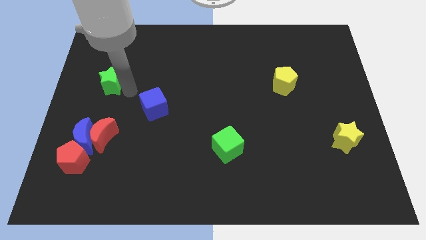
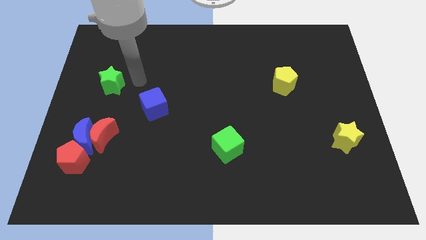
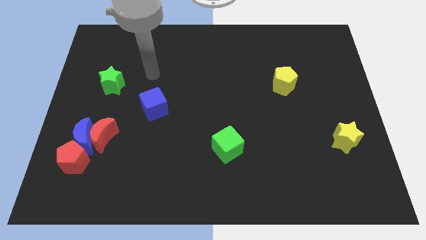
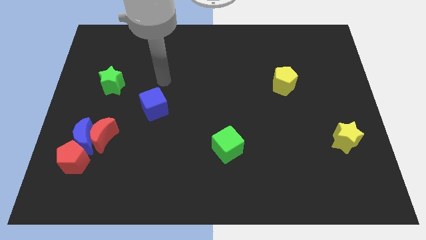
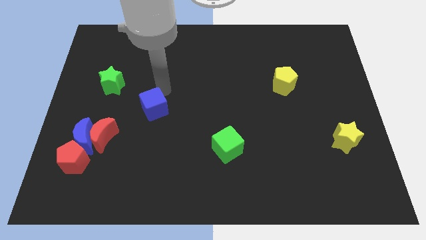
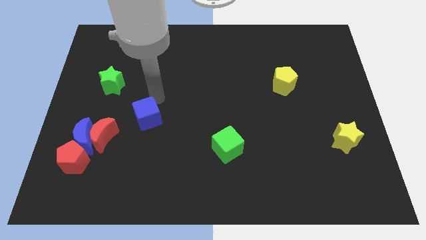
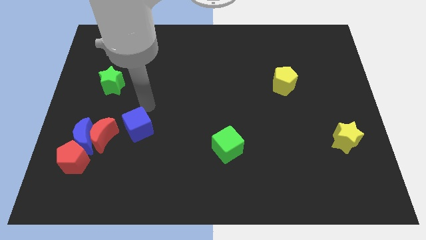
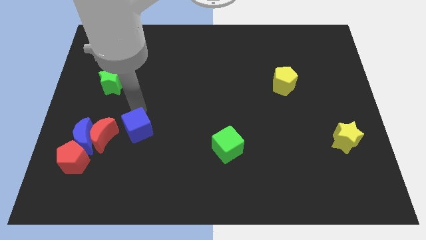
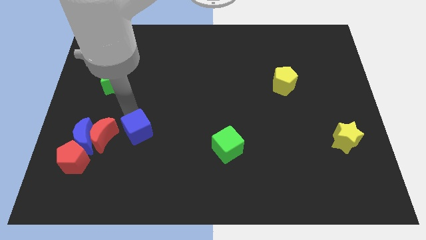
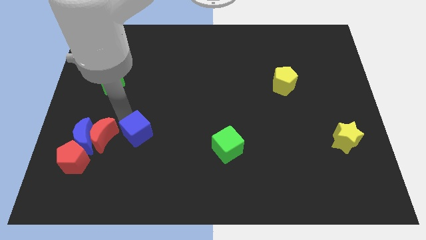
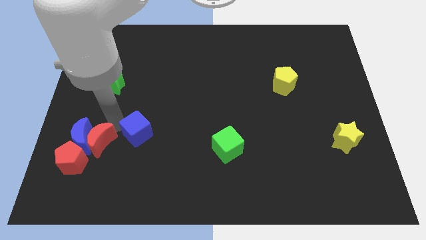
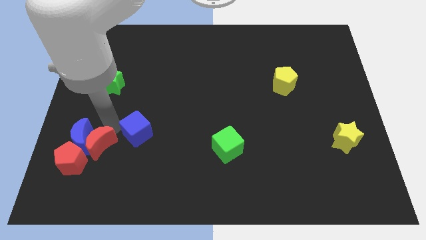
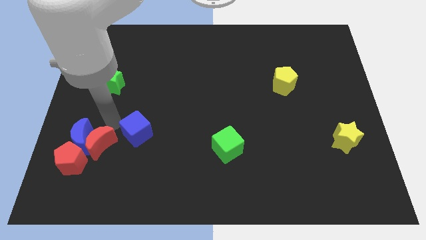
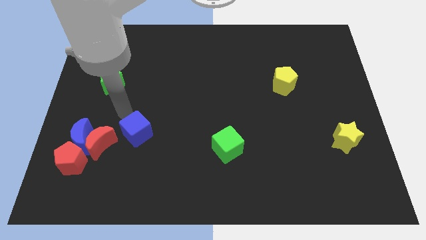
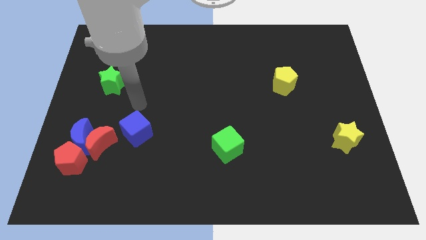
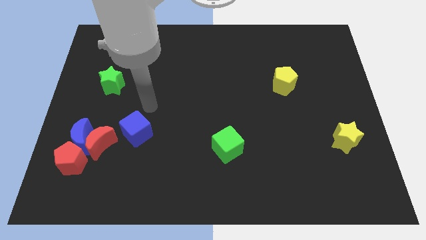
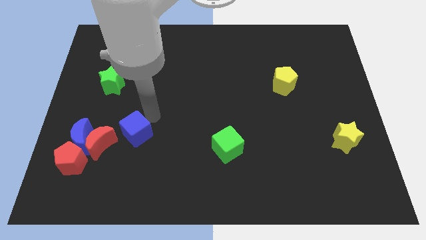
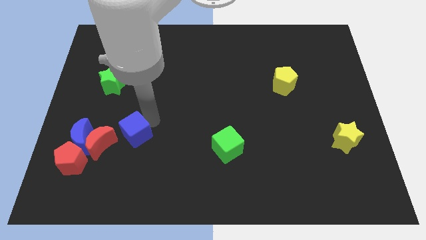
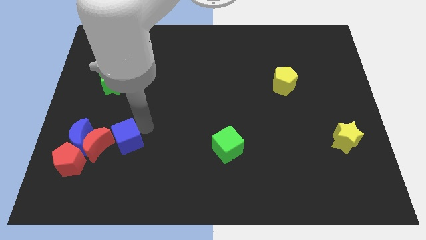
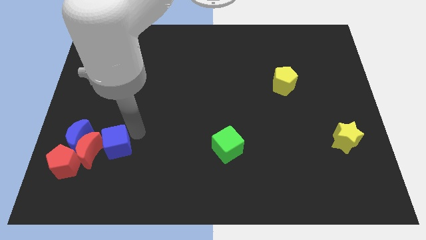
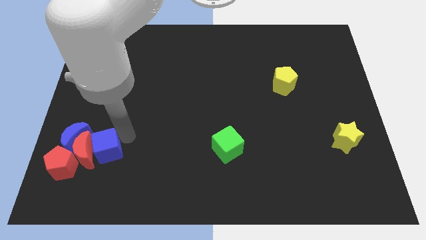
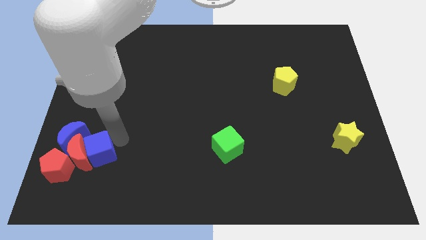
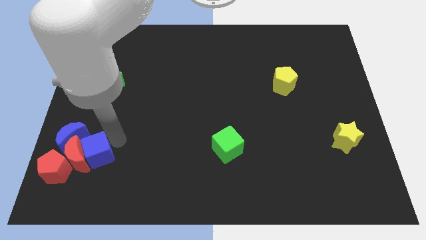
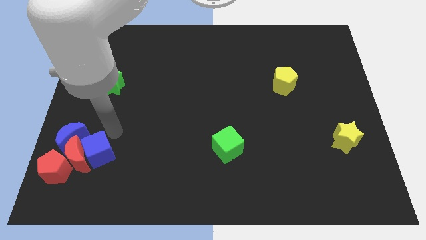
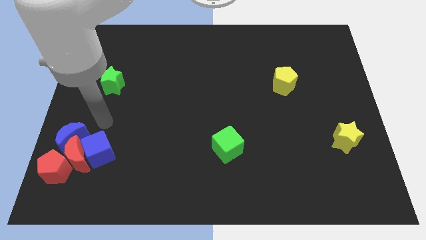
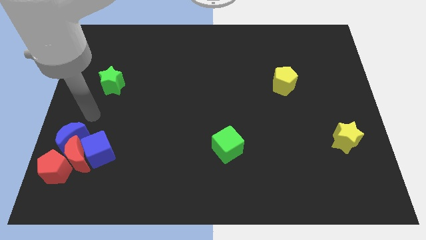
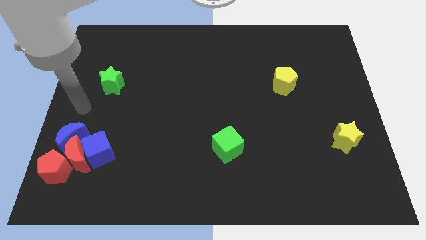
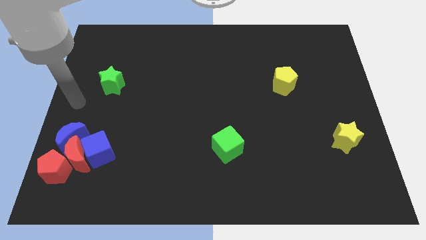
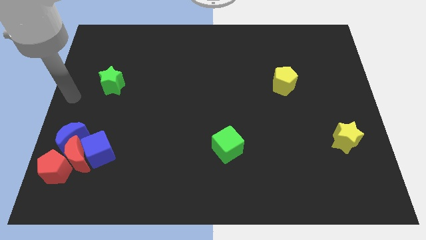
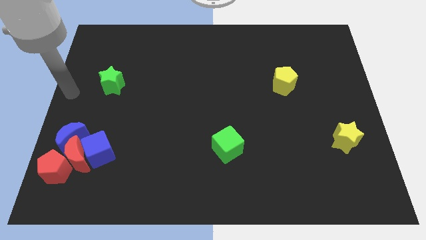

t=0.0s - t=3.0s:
push the blue cube into the group of blocks

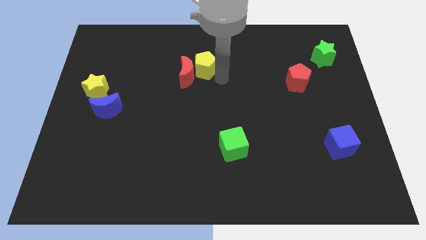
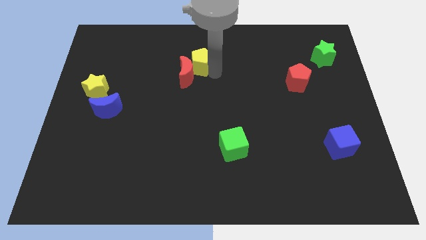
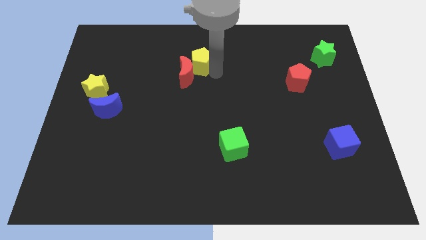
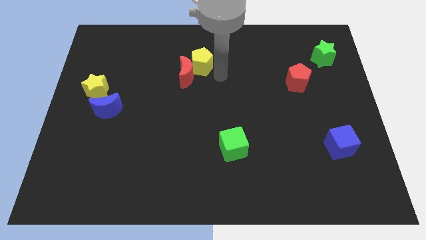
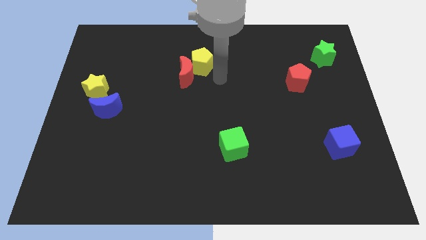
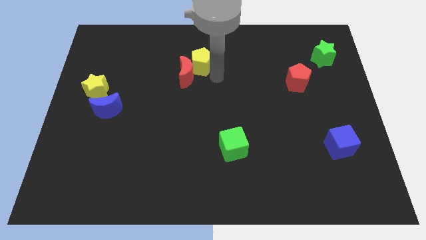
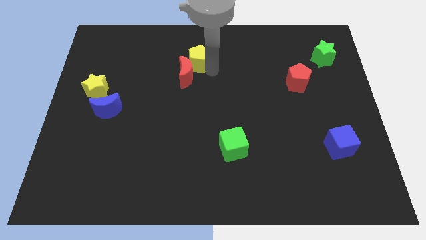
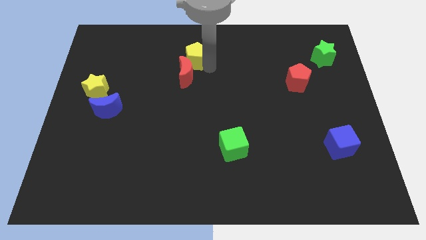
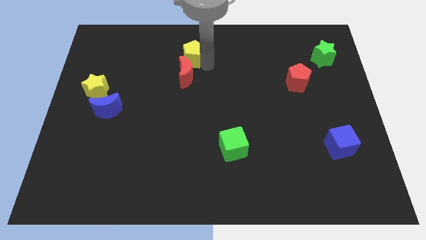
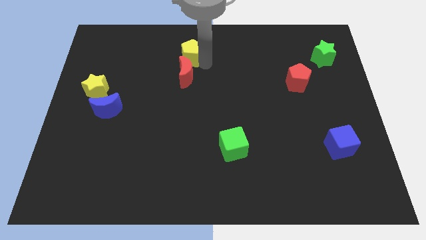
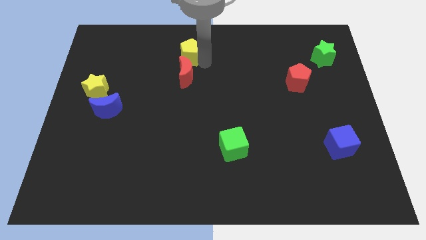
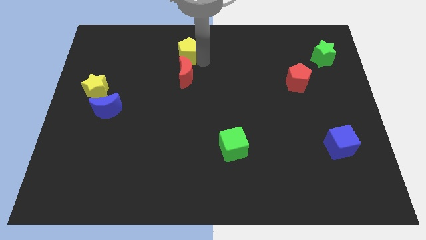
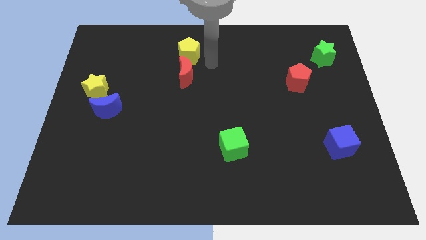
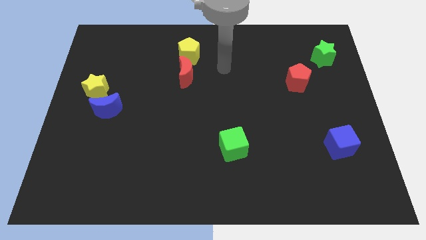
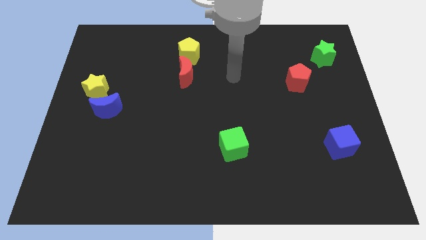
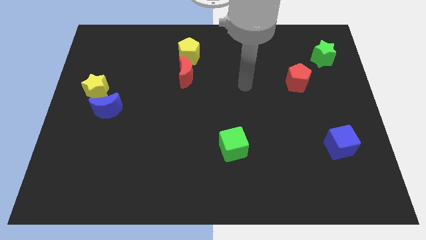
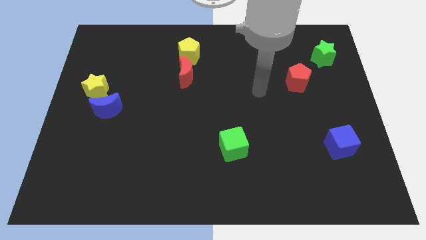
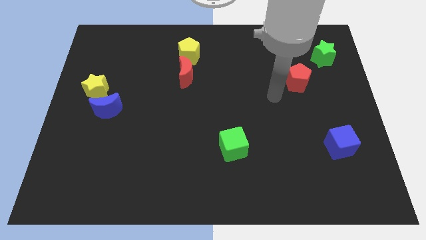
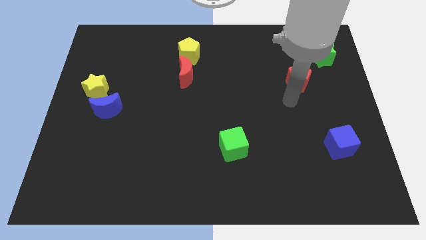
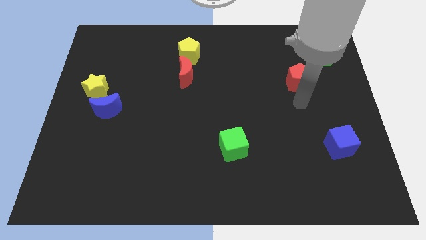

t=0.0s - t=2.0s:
place the yellow pentagon to top of the red moon

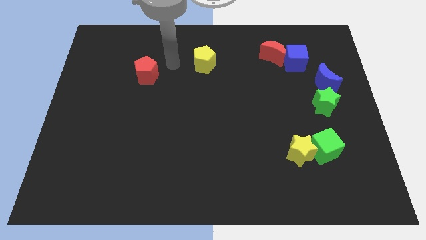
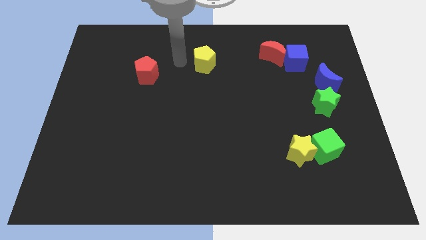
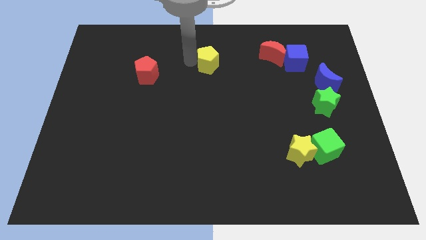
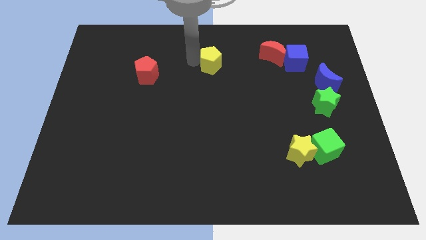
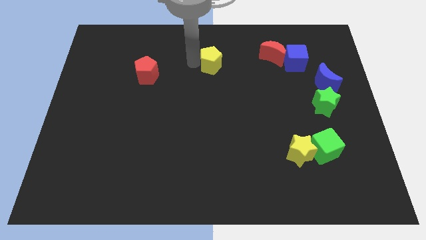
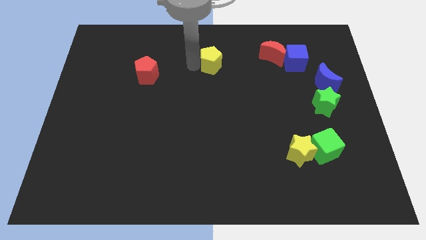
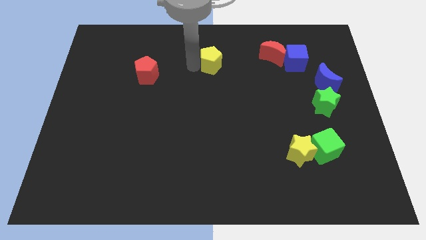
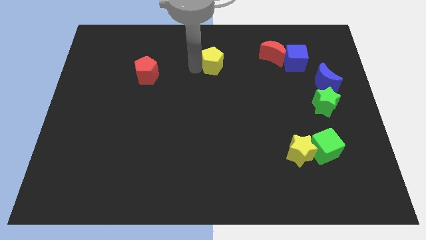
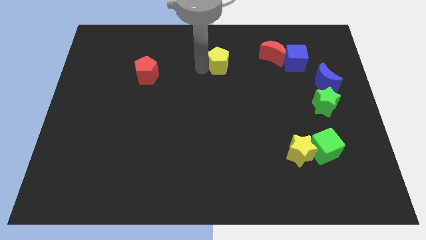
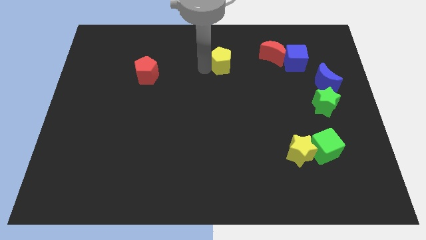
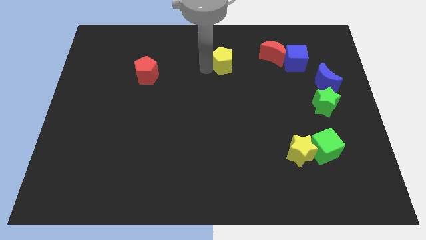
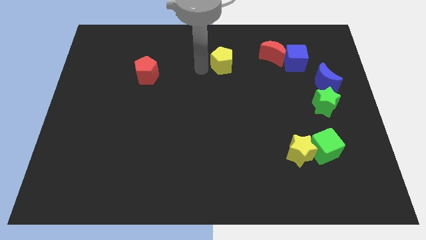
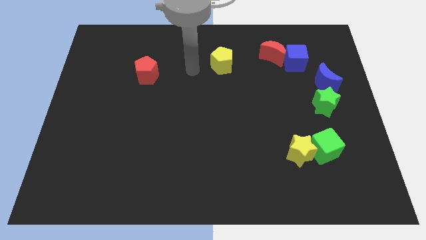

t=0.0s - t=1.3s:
push the yellow pentagon towards left of the red moon

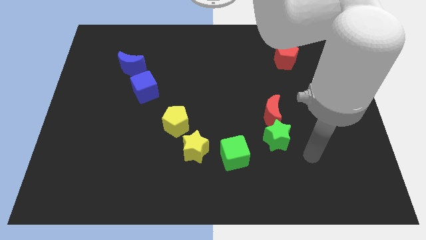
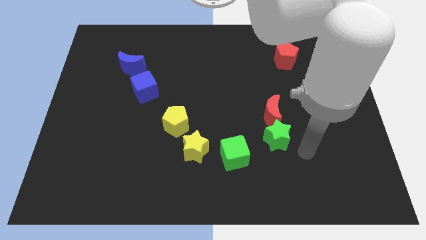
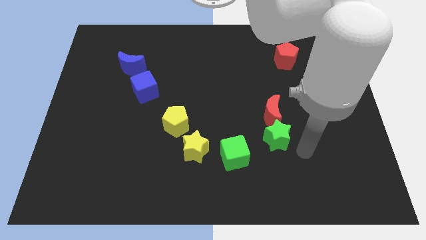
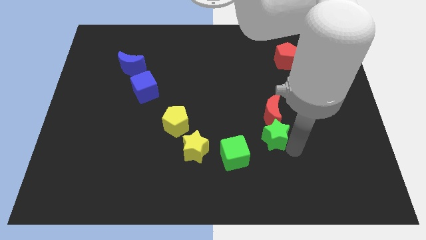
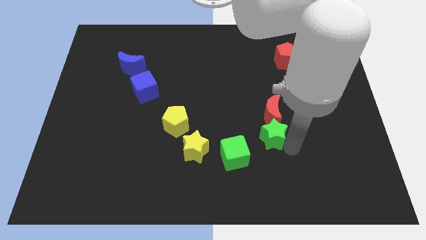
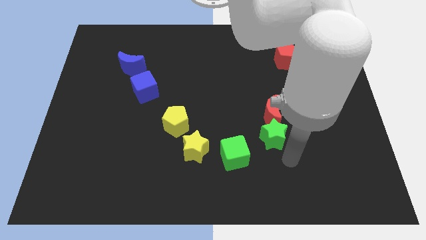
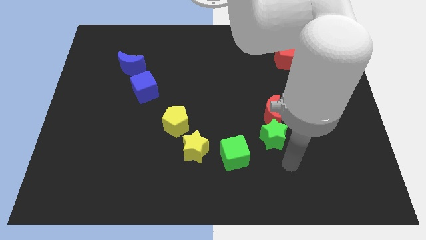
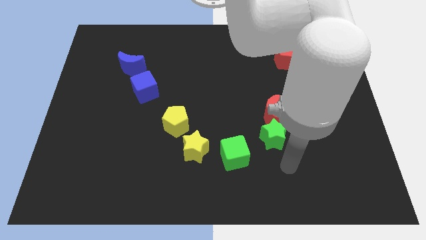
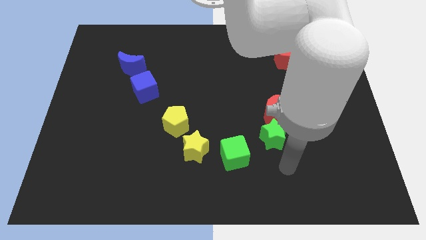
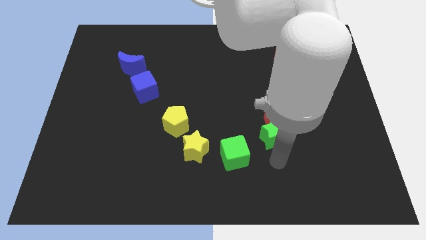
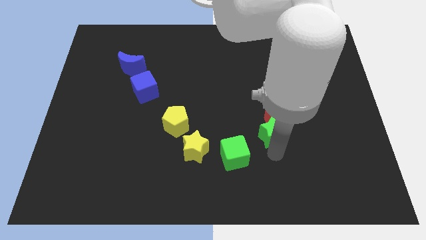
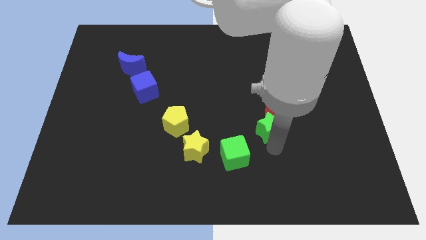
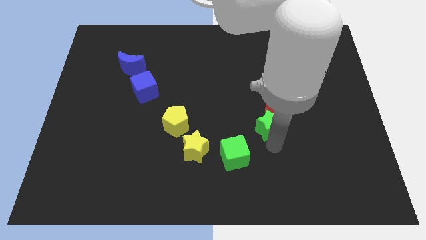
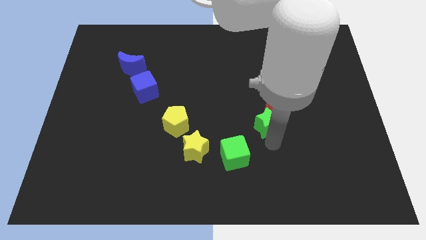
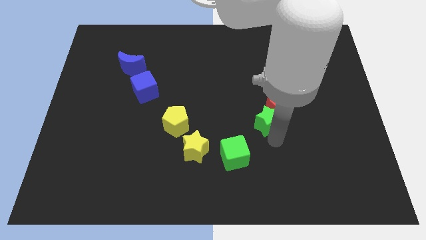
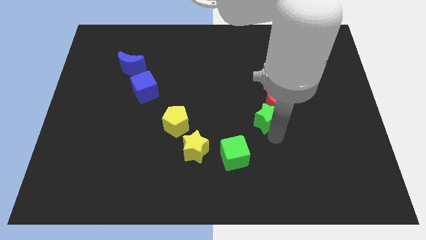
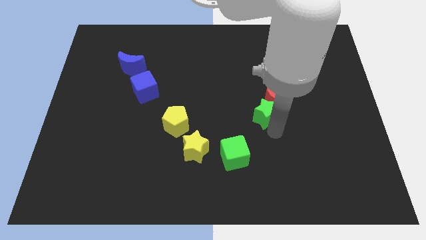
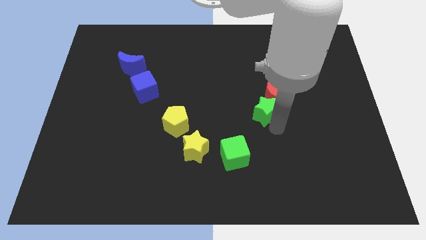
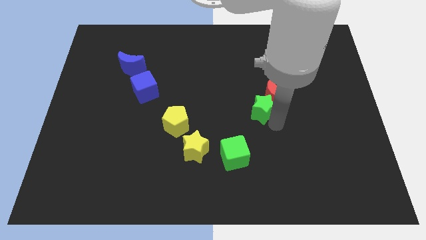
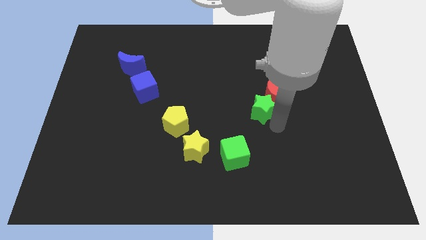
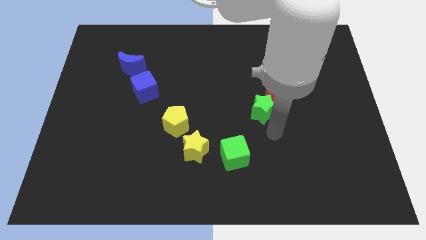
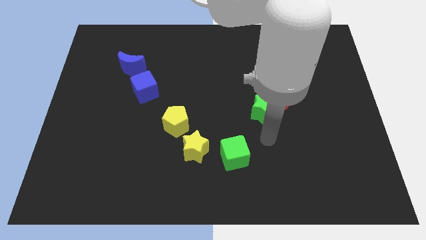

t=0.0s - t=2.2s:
push the green star and the red moon towards the top

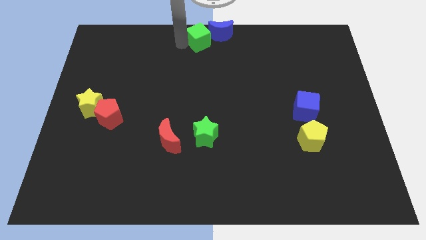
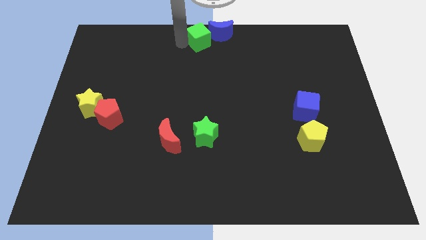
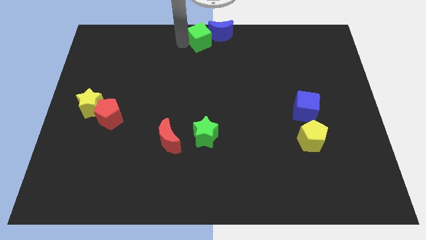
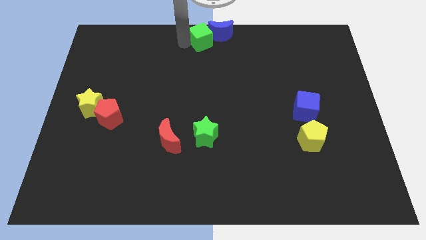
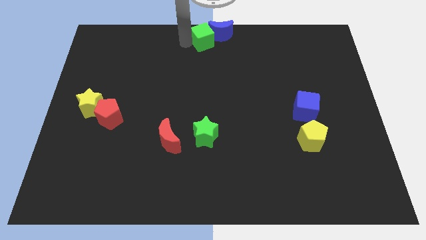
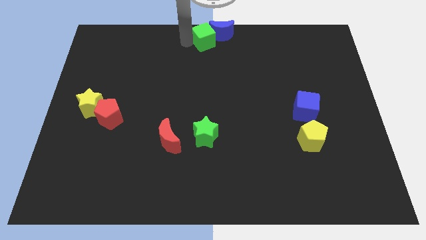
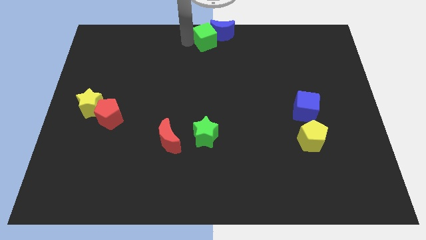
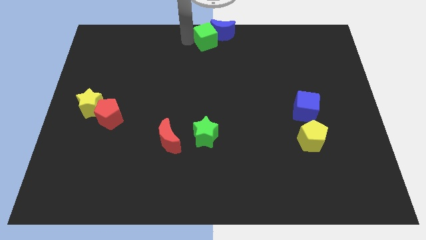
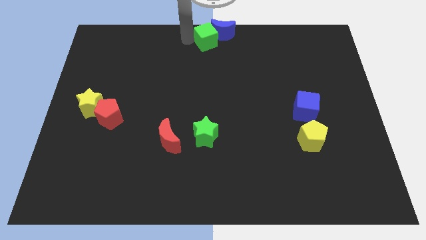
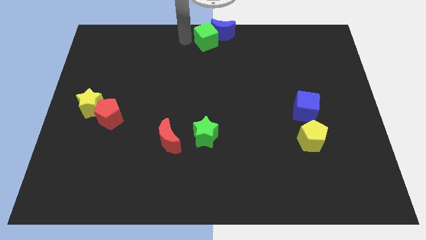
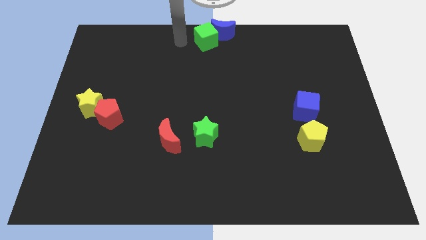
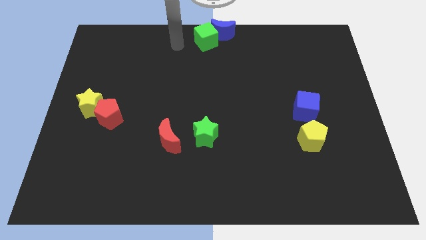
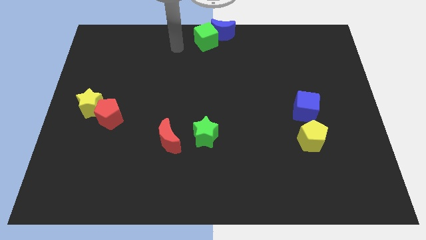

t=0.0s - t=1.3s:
move green cube towards blue moon
